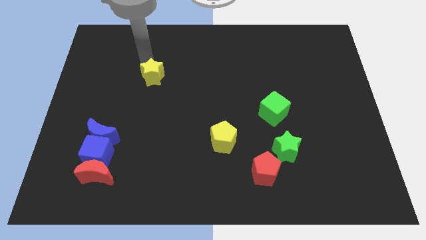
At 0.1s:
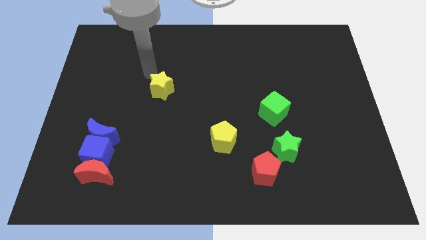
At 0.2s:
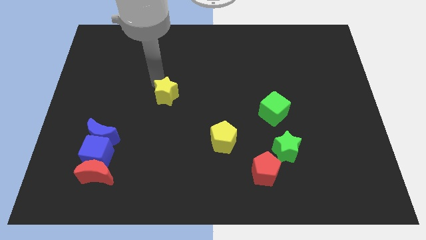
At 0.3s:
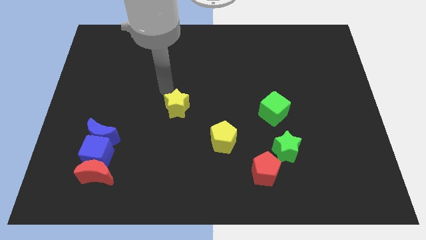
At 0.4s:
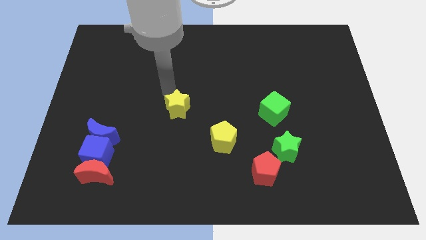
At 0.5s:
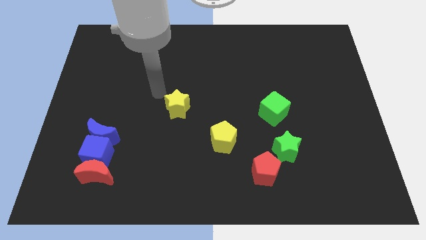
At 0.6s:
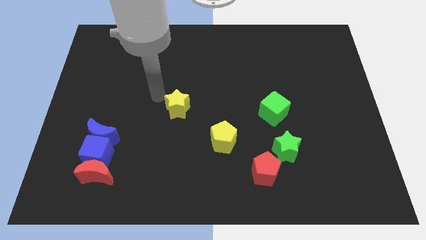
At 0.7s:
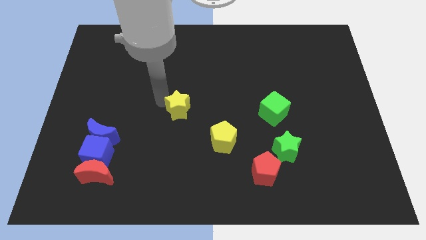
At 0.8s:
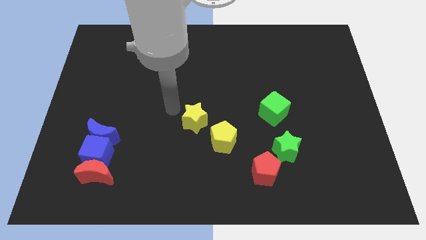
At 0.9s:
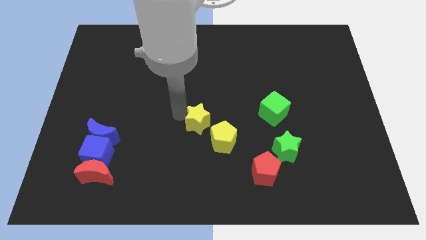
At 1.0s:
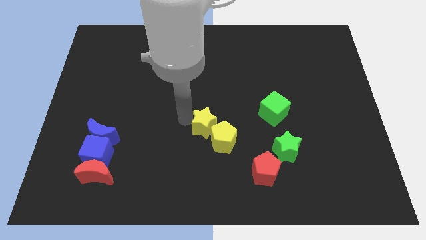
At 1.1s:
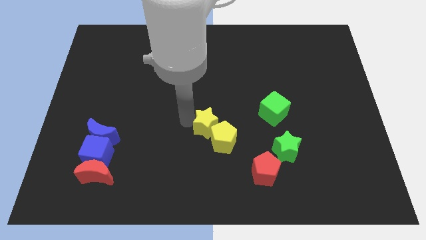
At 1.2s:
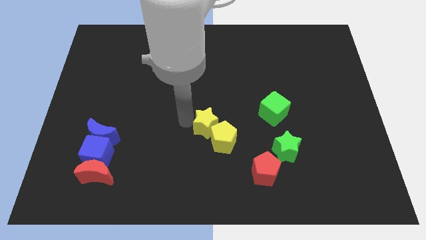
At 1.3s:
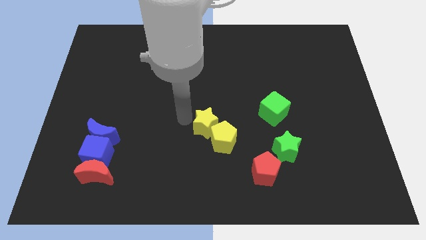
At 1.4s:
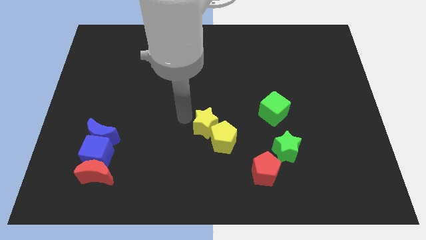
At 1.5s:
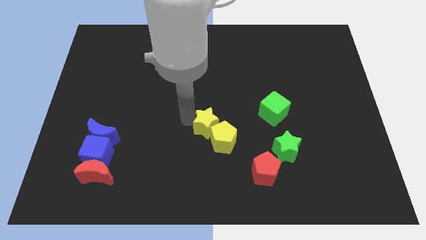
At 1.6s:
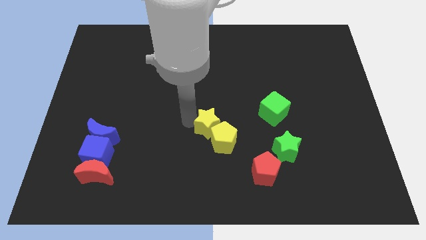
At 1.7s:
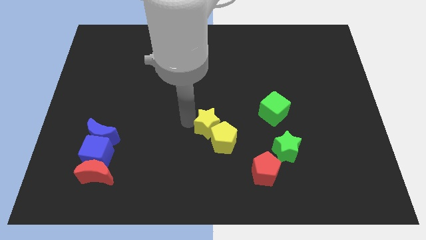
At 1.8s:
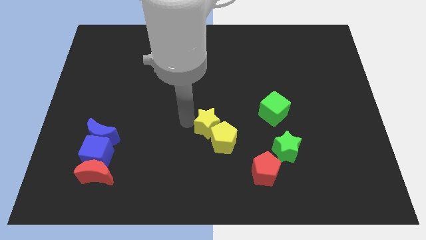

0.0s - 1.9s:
place the yellow star close to the yellow pentagon

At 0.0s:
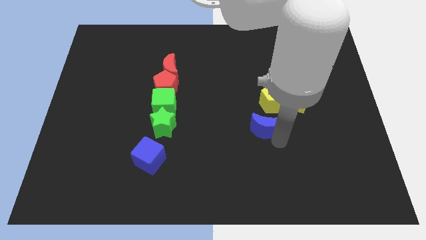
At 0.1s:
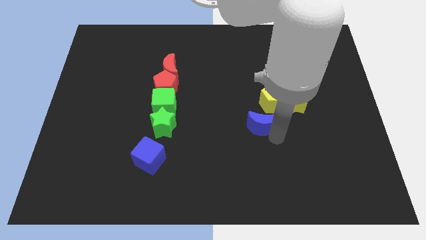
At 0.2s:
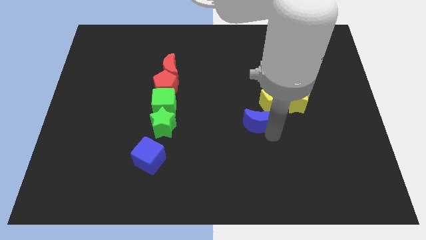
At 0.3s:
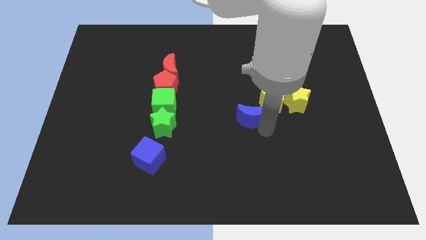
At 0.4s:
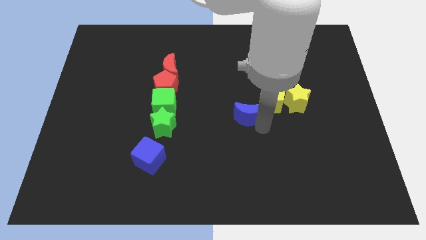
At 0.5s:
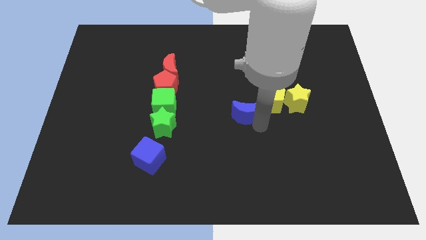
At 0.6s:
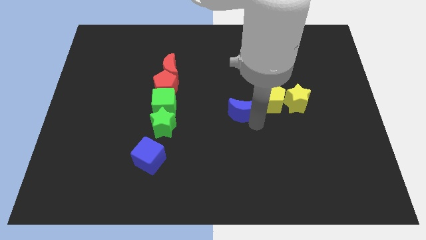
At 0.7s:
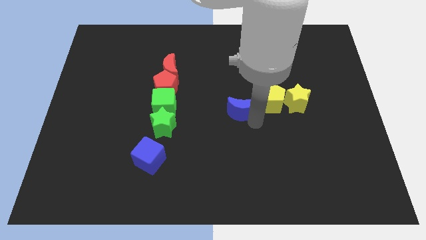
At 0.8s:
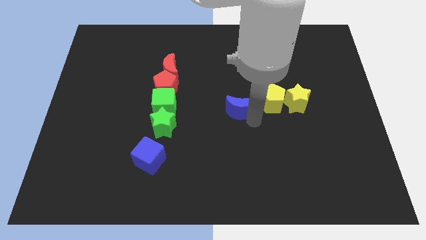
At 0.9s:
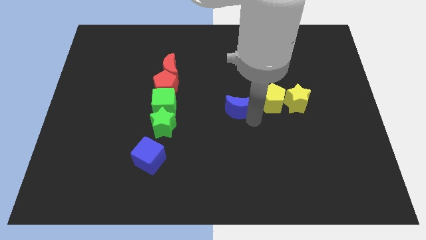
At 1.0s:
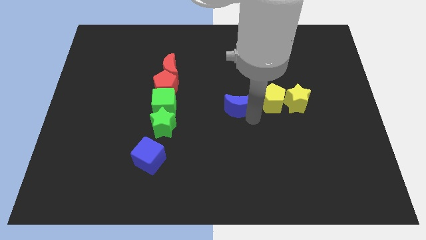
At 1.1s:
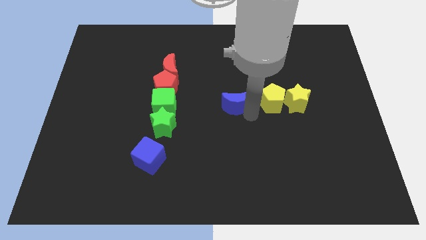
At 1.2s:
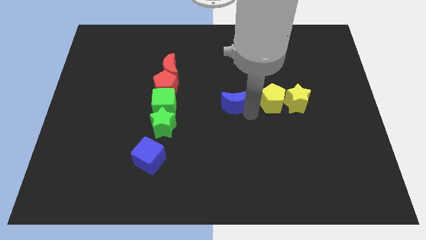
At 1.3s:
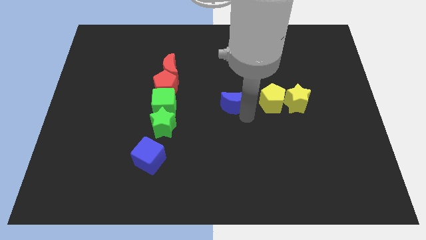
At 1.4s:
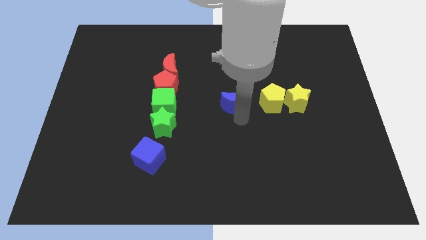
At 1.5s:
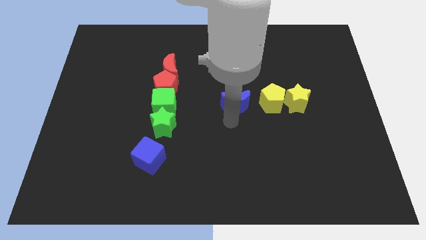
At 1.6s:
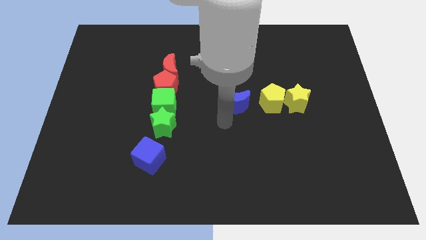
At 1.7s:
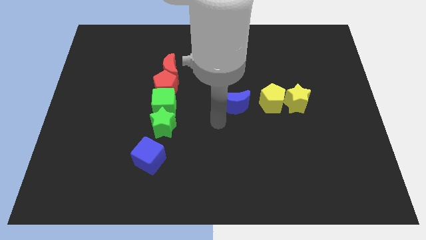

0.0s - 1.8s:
place blue moon to the left of the yellow pentagon

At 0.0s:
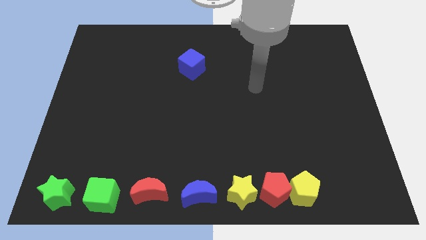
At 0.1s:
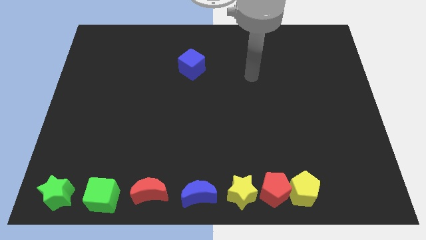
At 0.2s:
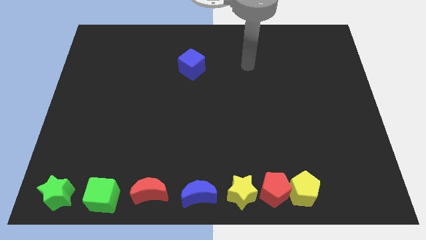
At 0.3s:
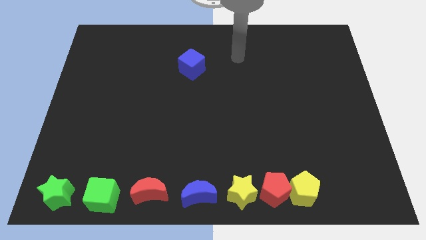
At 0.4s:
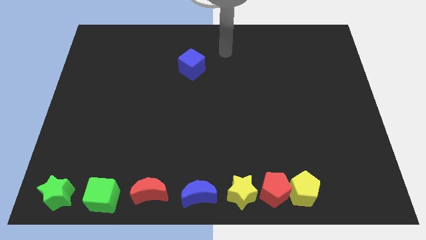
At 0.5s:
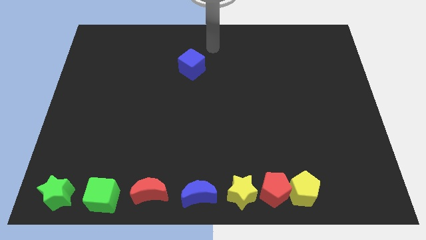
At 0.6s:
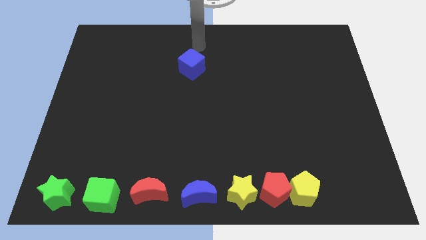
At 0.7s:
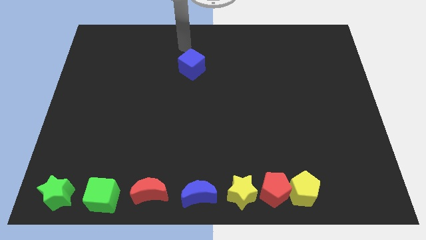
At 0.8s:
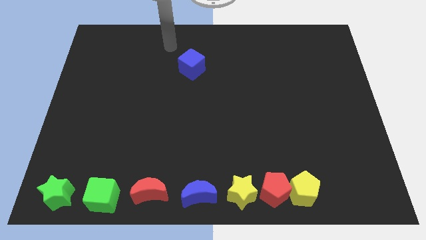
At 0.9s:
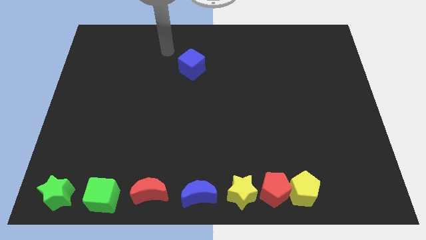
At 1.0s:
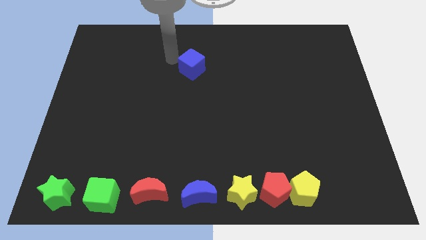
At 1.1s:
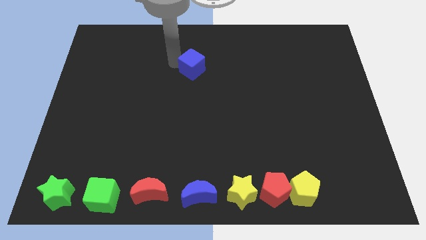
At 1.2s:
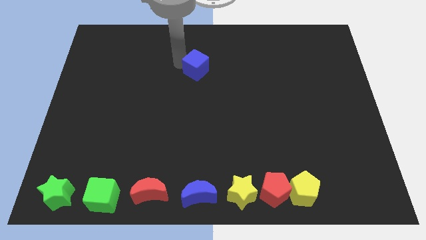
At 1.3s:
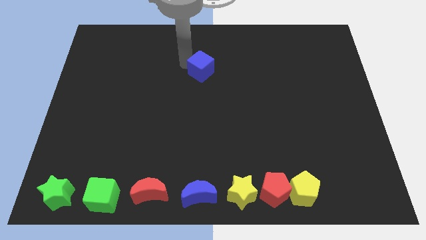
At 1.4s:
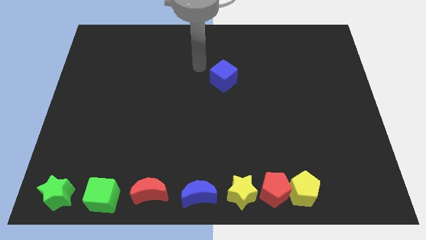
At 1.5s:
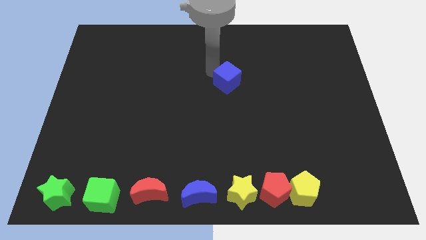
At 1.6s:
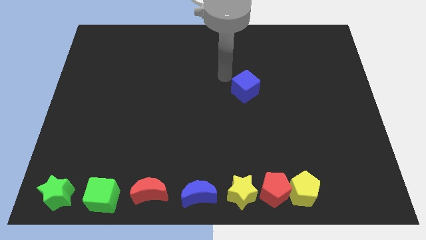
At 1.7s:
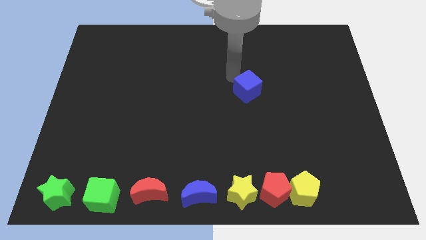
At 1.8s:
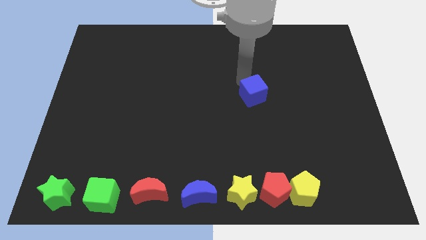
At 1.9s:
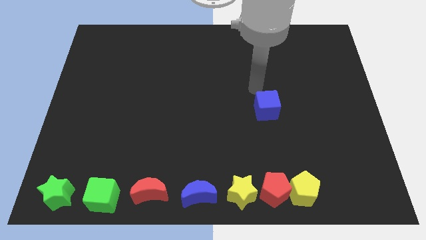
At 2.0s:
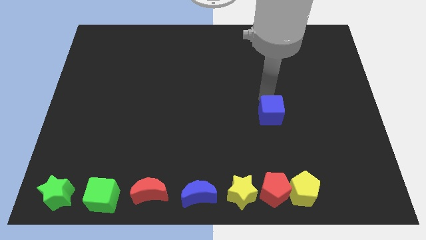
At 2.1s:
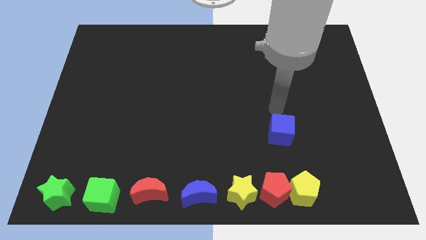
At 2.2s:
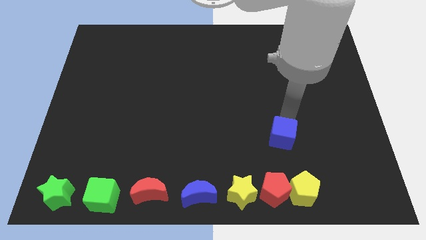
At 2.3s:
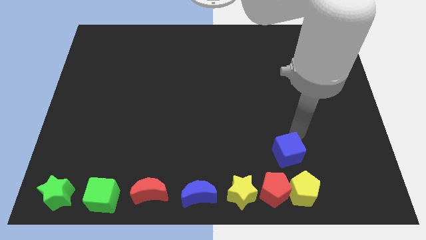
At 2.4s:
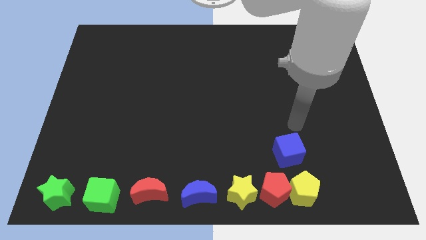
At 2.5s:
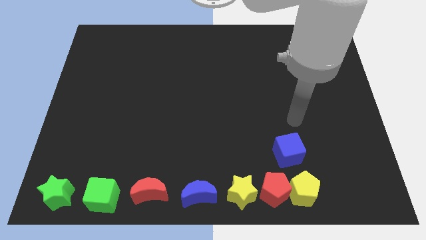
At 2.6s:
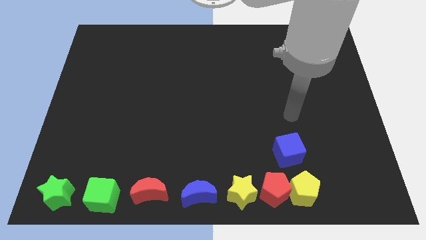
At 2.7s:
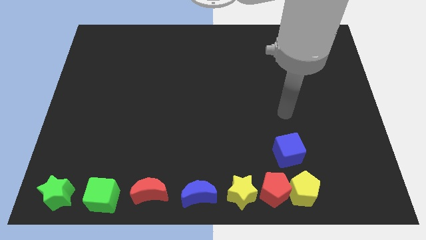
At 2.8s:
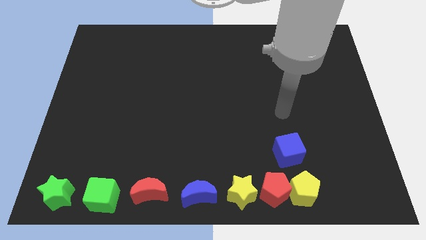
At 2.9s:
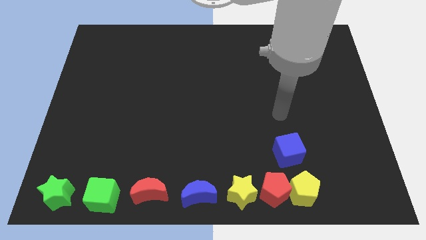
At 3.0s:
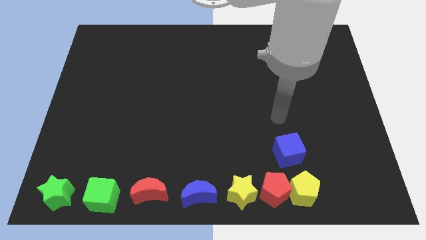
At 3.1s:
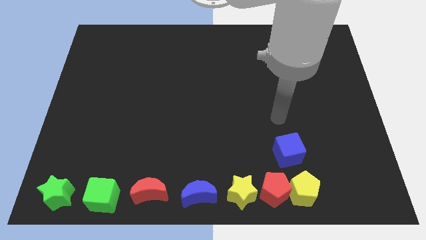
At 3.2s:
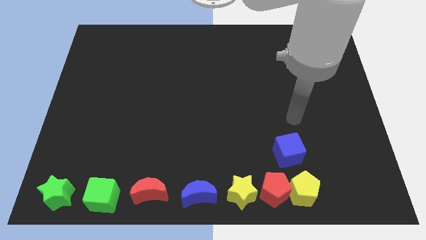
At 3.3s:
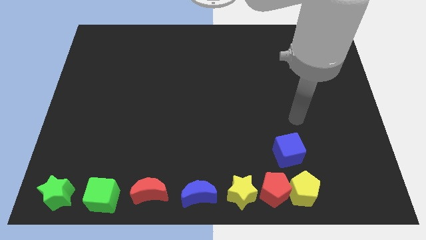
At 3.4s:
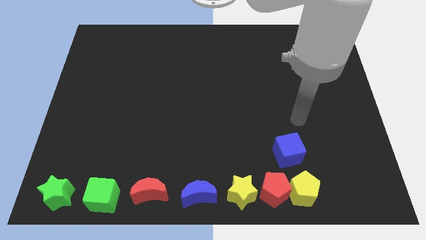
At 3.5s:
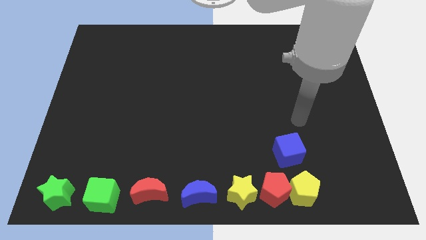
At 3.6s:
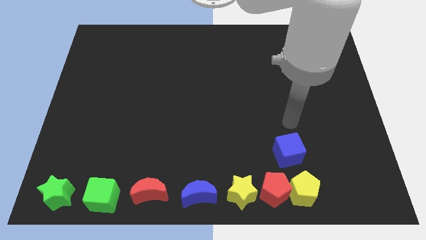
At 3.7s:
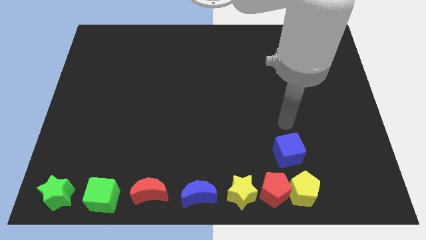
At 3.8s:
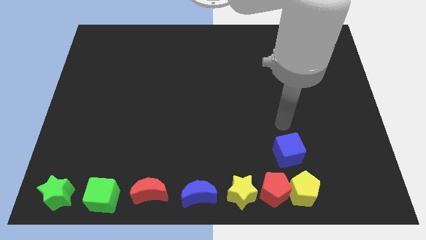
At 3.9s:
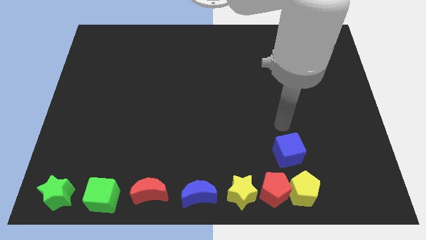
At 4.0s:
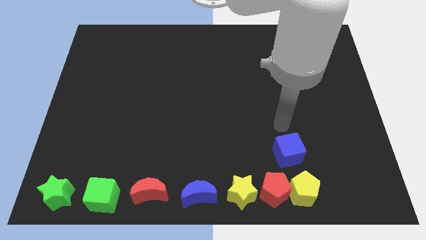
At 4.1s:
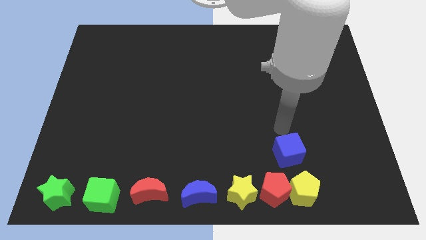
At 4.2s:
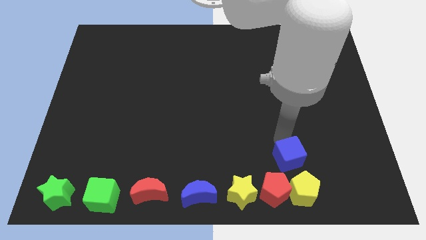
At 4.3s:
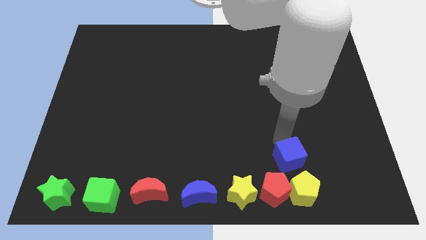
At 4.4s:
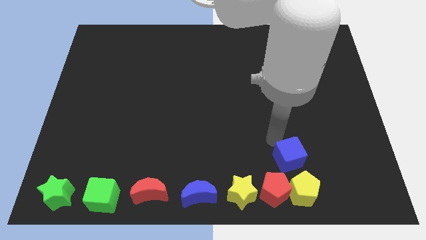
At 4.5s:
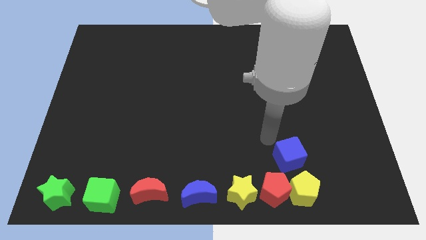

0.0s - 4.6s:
move the blue cube top side of the red and yellow pentagons

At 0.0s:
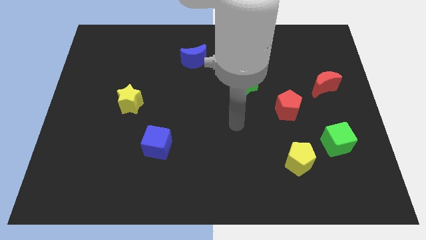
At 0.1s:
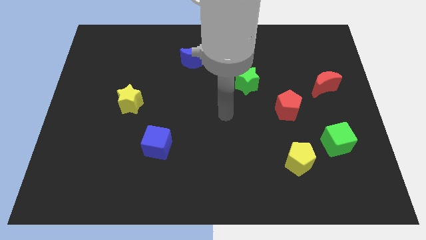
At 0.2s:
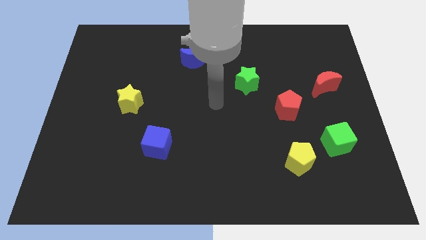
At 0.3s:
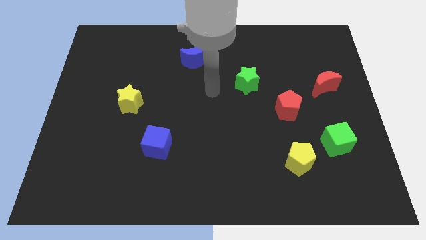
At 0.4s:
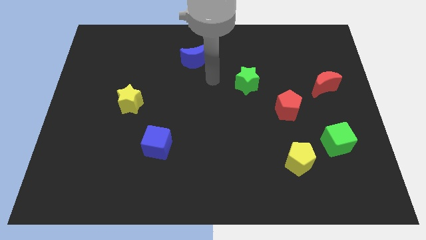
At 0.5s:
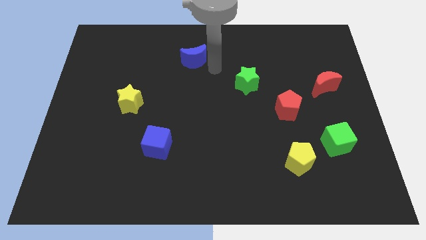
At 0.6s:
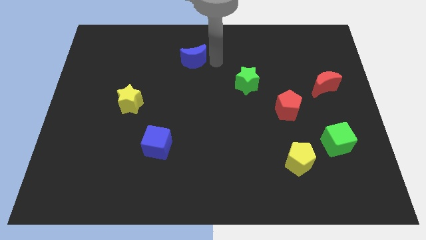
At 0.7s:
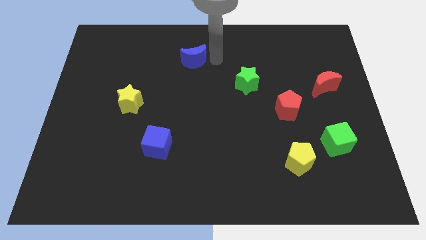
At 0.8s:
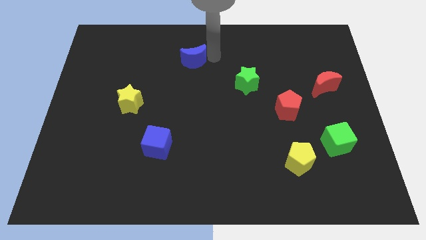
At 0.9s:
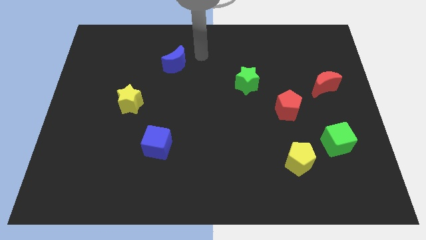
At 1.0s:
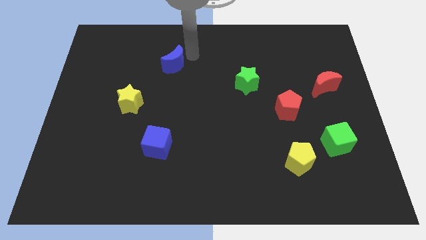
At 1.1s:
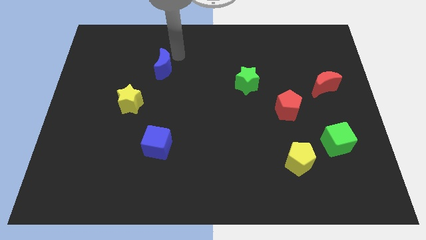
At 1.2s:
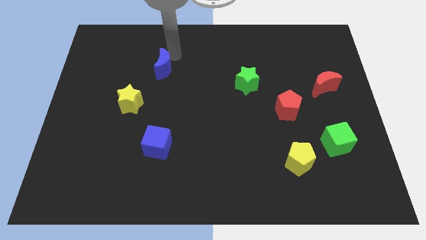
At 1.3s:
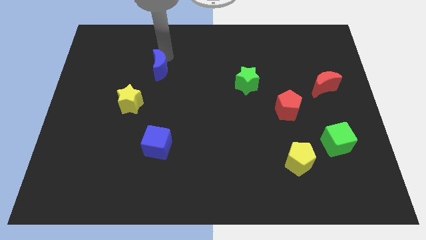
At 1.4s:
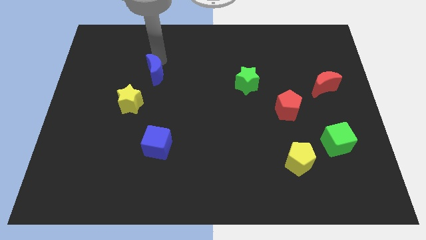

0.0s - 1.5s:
push the blue crescent diagonally right to the yellow star
